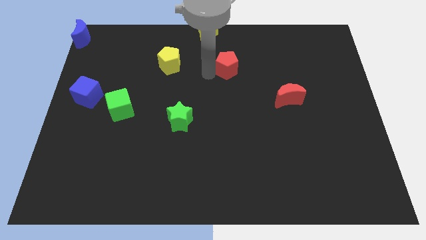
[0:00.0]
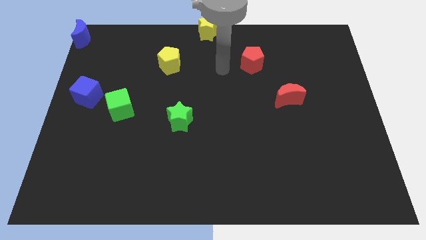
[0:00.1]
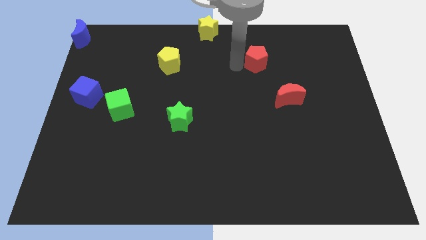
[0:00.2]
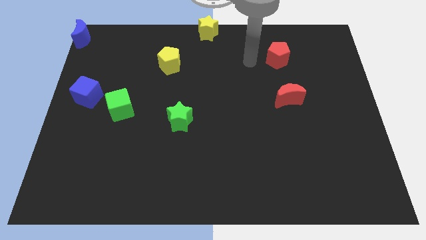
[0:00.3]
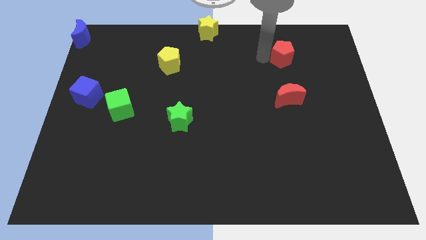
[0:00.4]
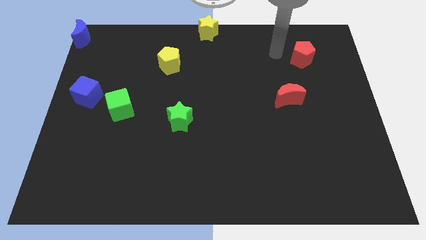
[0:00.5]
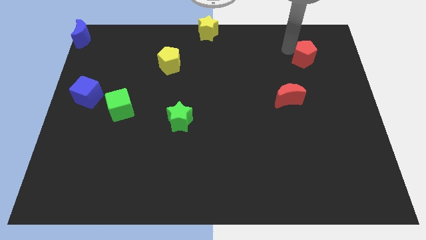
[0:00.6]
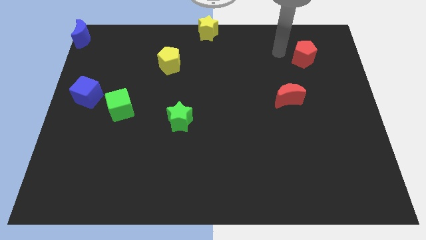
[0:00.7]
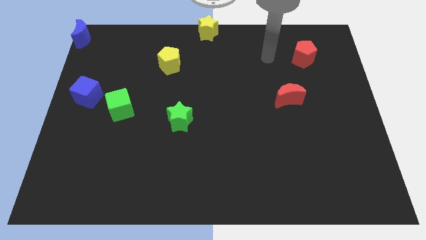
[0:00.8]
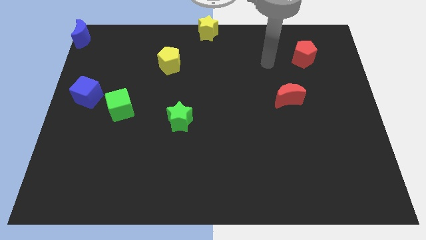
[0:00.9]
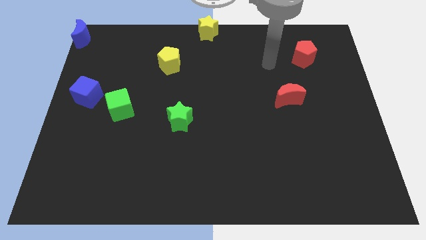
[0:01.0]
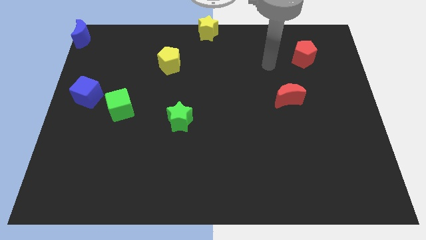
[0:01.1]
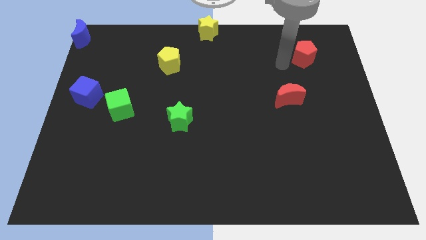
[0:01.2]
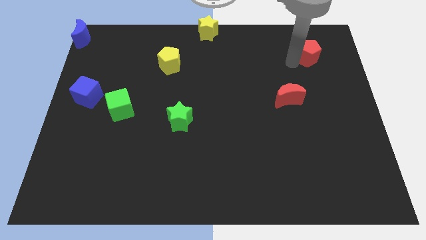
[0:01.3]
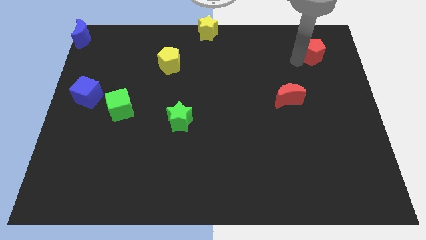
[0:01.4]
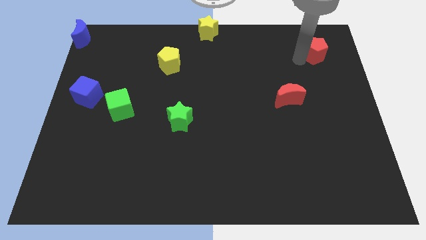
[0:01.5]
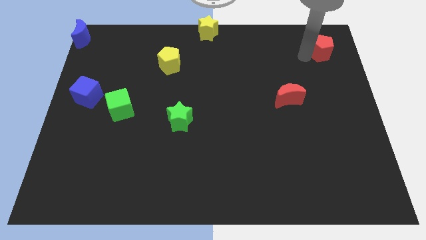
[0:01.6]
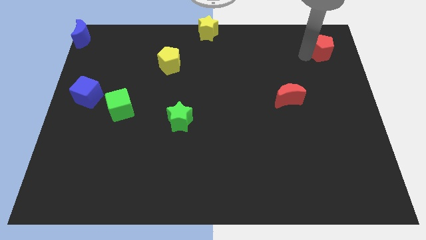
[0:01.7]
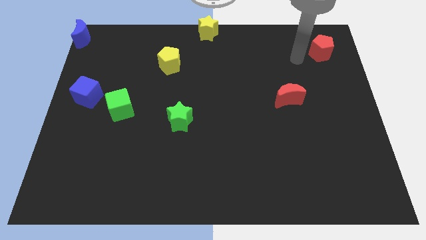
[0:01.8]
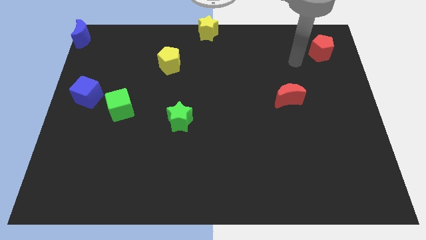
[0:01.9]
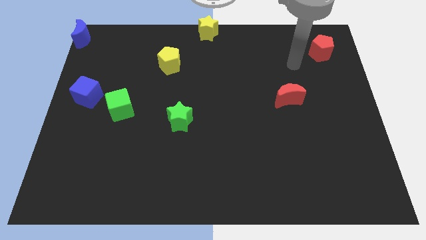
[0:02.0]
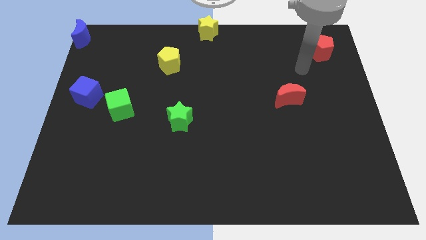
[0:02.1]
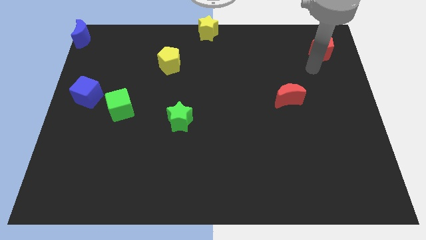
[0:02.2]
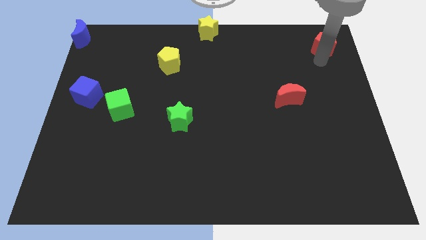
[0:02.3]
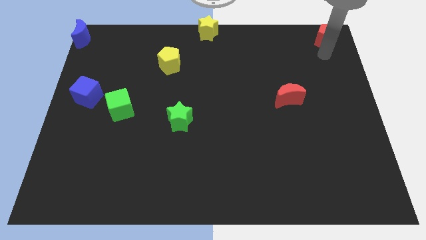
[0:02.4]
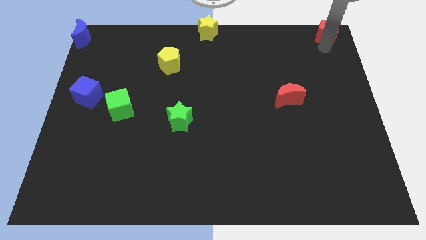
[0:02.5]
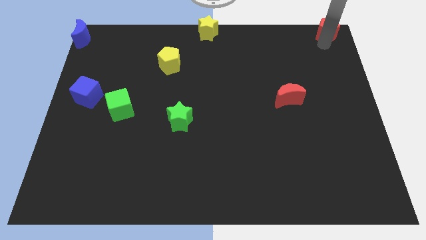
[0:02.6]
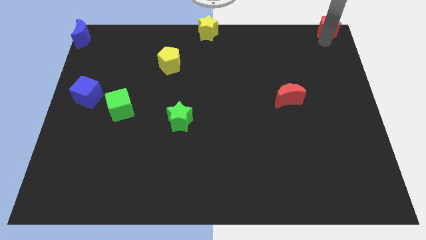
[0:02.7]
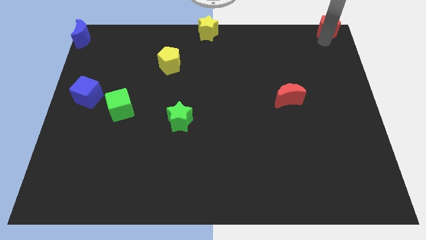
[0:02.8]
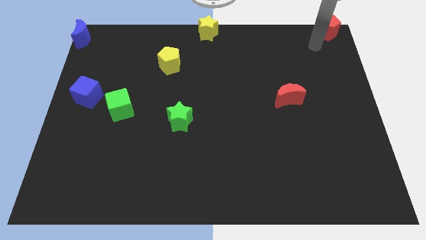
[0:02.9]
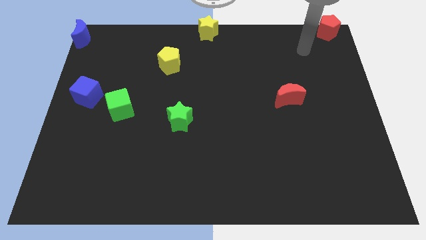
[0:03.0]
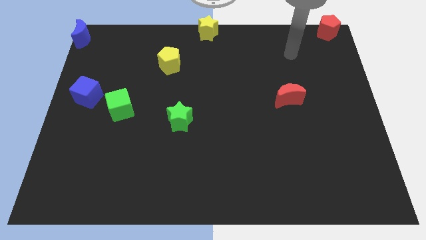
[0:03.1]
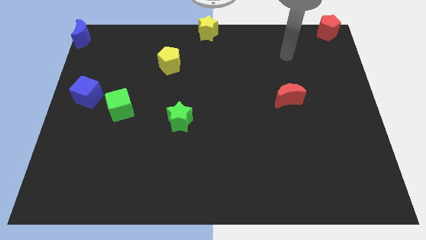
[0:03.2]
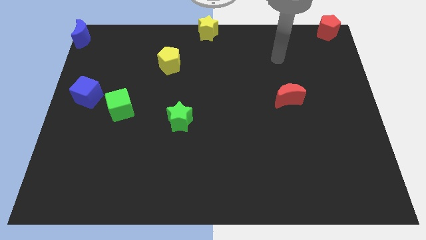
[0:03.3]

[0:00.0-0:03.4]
place the red pentagon to the top right side of the board

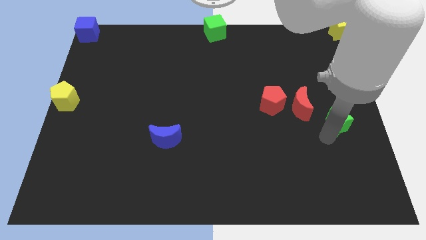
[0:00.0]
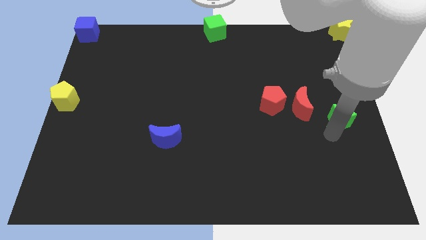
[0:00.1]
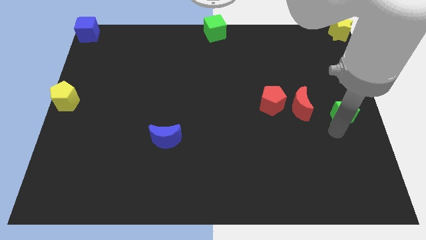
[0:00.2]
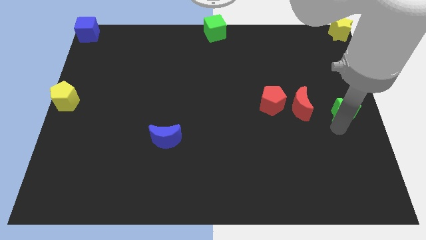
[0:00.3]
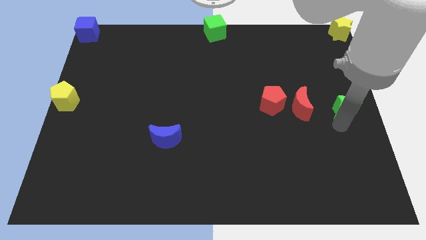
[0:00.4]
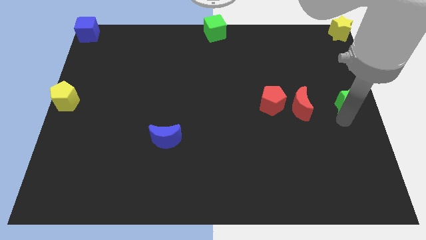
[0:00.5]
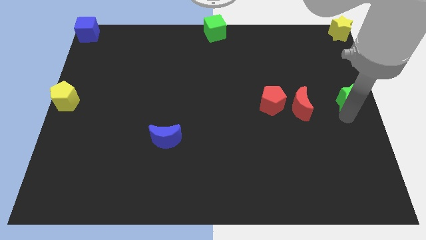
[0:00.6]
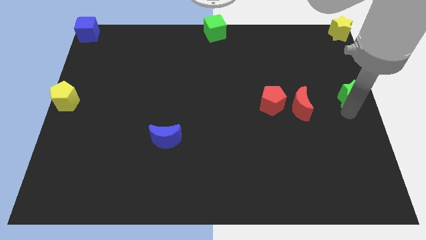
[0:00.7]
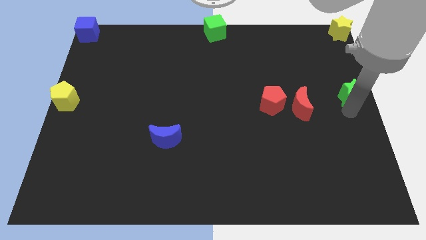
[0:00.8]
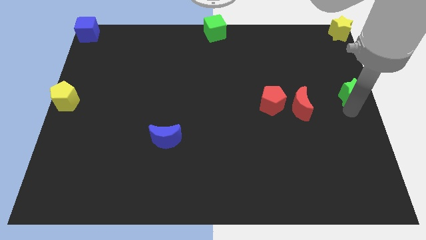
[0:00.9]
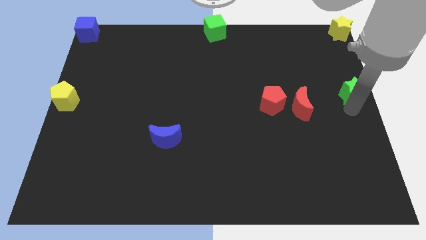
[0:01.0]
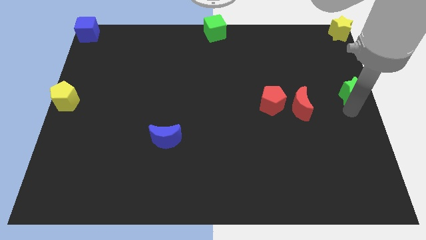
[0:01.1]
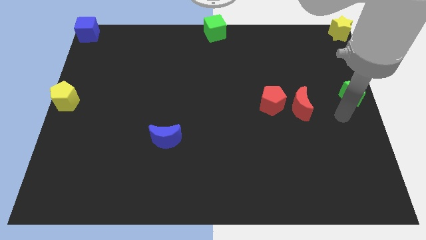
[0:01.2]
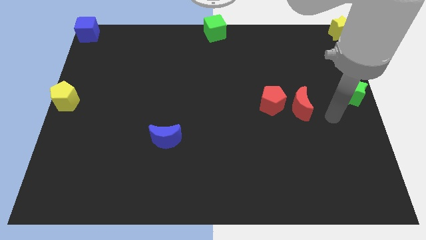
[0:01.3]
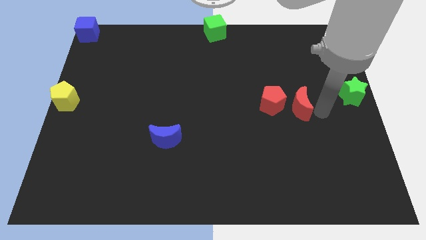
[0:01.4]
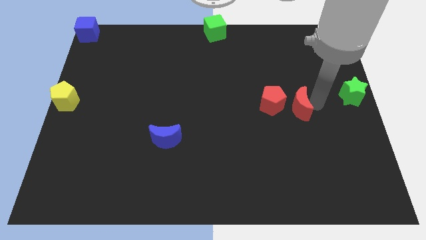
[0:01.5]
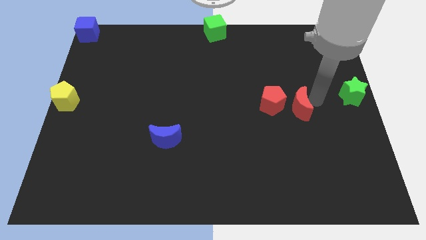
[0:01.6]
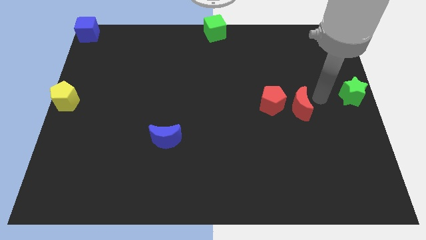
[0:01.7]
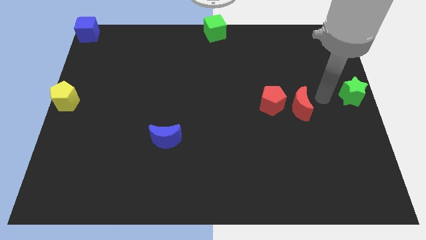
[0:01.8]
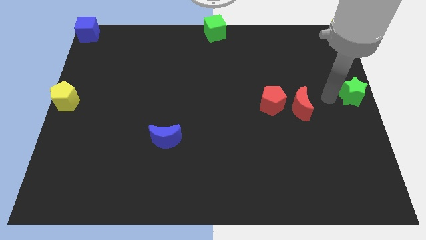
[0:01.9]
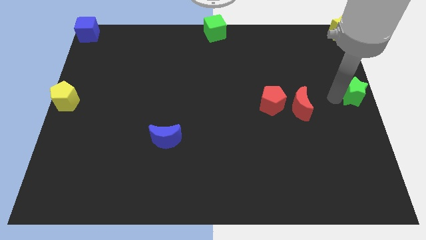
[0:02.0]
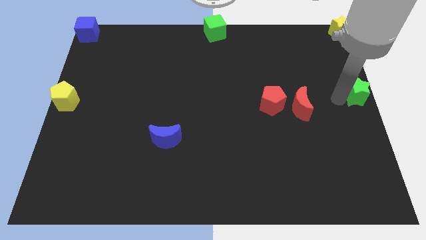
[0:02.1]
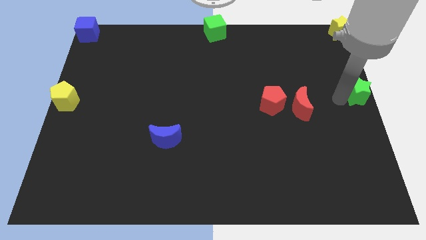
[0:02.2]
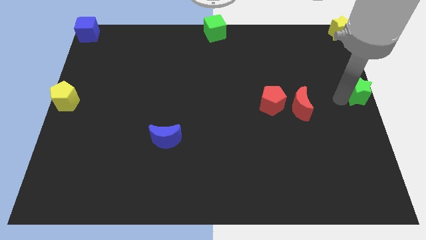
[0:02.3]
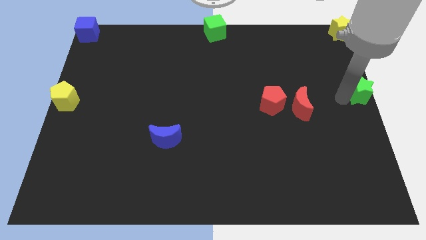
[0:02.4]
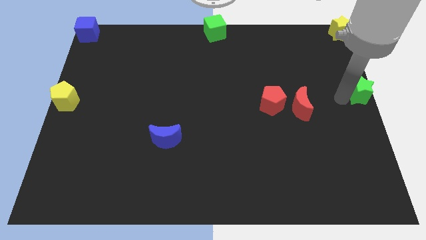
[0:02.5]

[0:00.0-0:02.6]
move the green star to the right center of the board

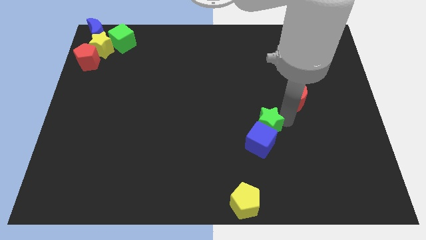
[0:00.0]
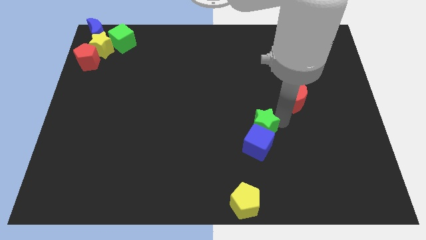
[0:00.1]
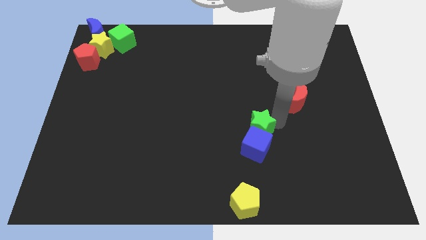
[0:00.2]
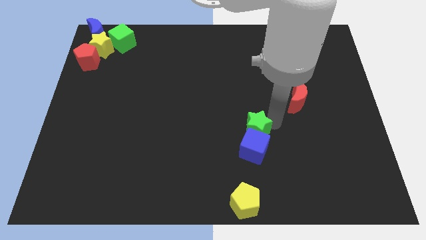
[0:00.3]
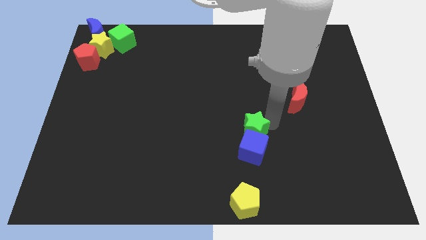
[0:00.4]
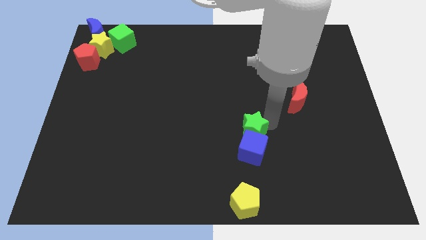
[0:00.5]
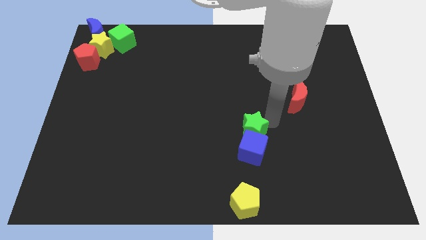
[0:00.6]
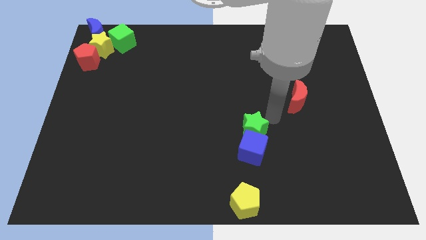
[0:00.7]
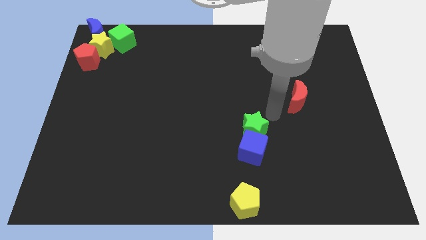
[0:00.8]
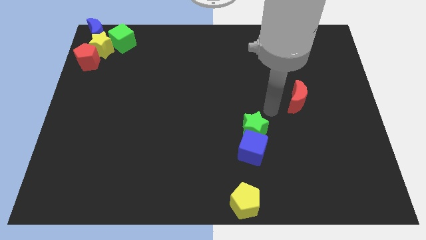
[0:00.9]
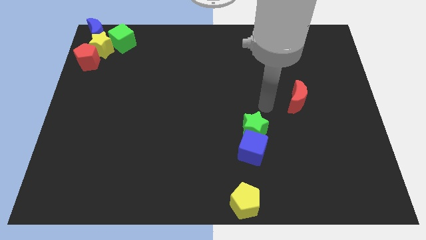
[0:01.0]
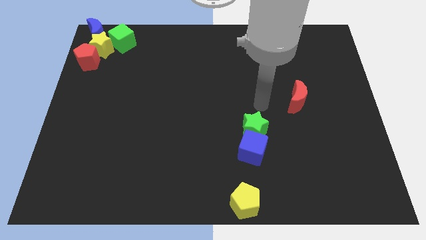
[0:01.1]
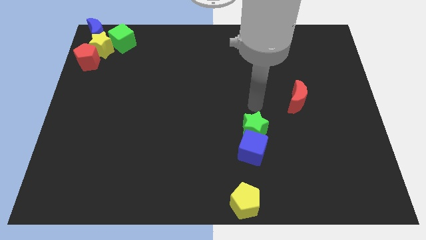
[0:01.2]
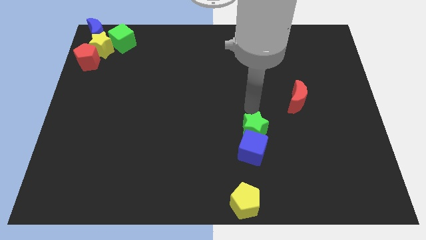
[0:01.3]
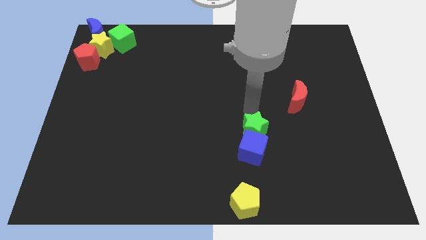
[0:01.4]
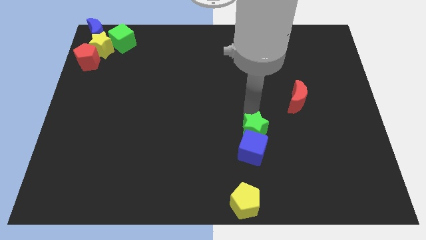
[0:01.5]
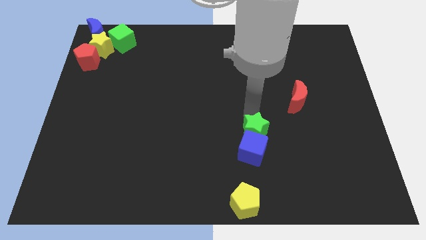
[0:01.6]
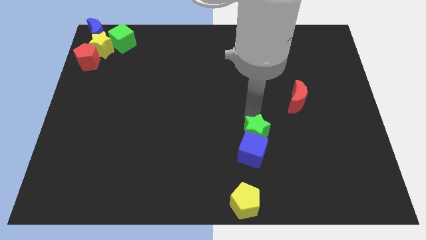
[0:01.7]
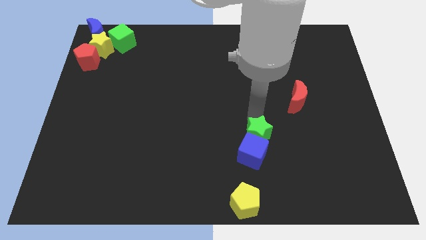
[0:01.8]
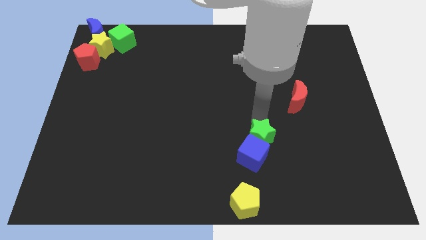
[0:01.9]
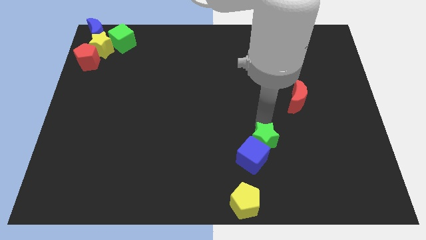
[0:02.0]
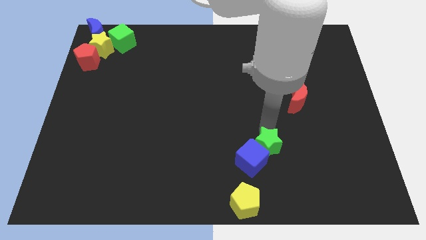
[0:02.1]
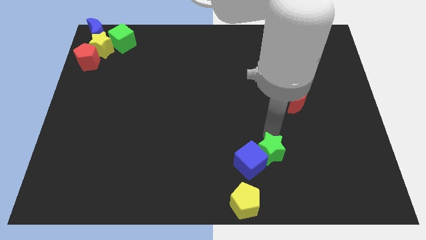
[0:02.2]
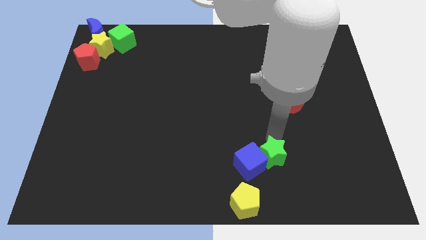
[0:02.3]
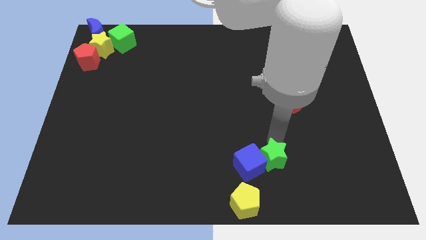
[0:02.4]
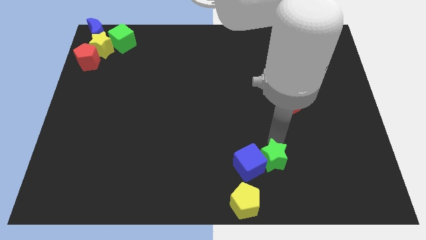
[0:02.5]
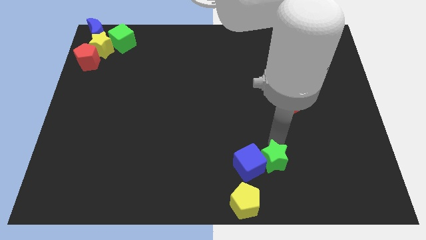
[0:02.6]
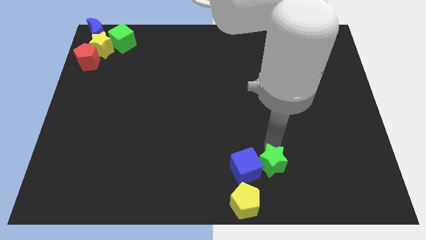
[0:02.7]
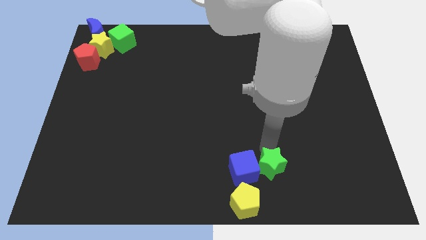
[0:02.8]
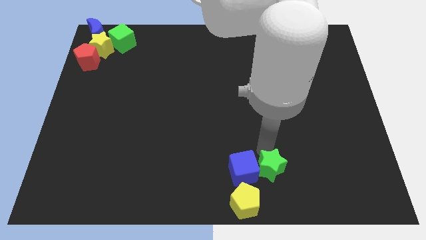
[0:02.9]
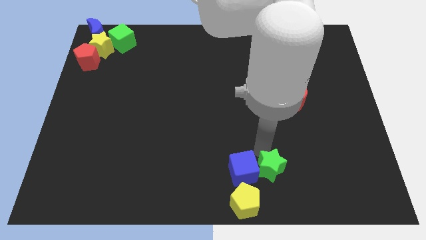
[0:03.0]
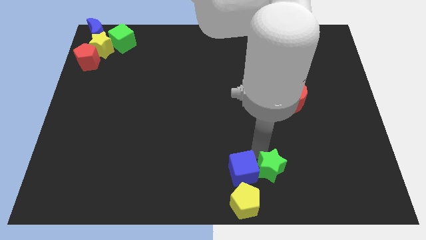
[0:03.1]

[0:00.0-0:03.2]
push the green cube along with blue cube to the top of the yellow pentagon
